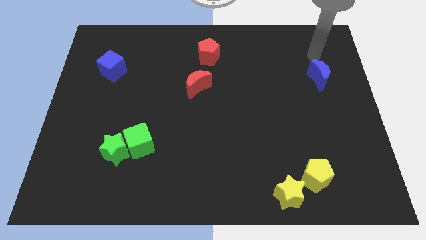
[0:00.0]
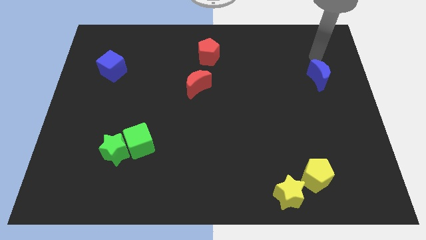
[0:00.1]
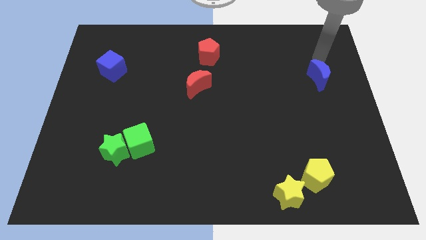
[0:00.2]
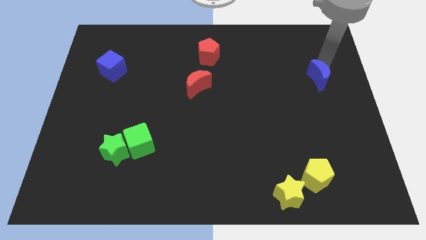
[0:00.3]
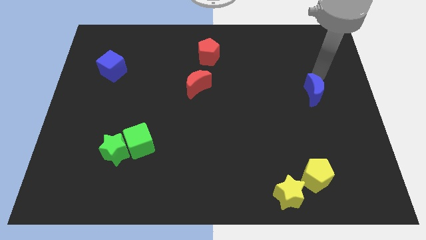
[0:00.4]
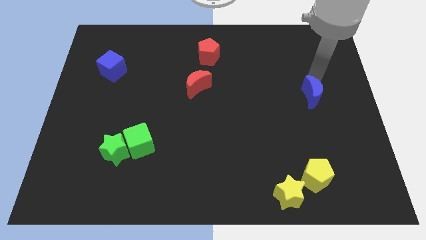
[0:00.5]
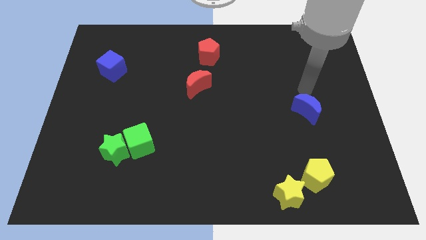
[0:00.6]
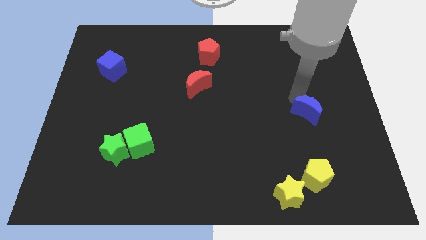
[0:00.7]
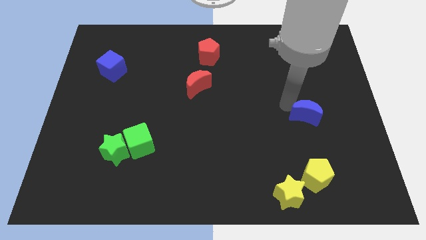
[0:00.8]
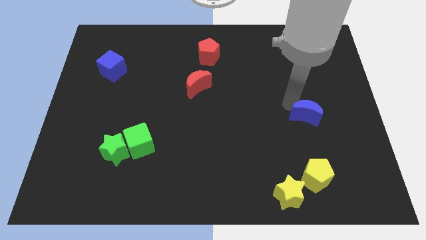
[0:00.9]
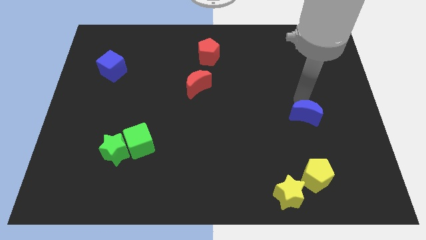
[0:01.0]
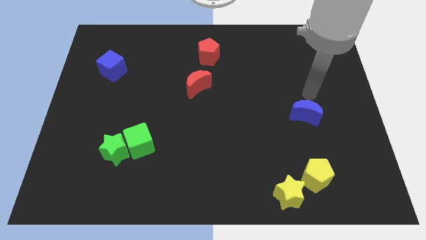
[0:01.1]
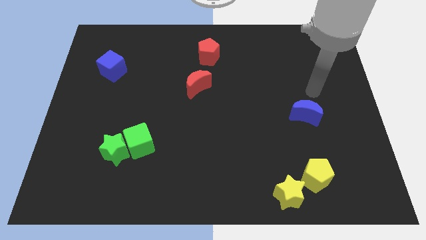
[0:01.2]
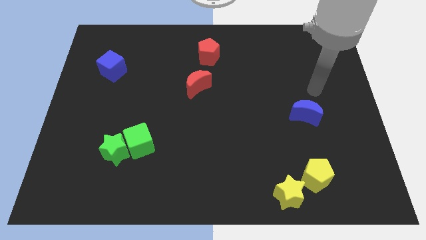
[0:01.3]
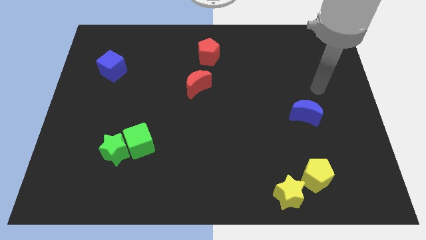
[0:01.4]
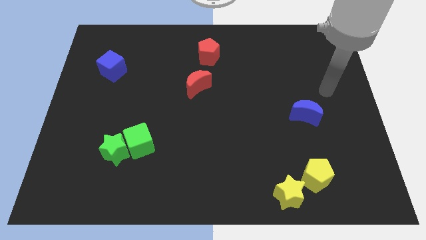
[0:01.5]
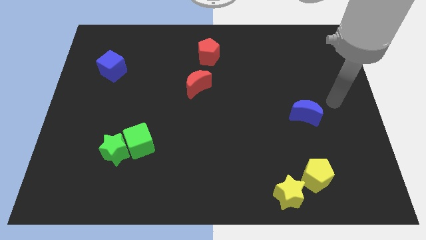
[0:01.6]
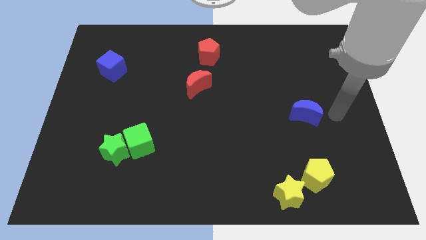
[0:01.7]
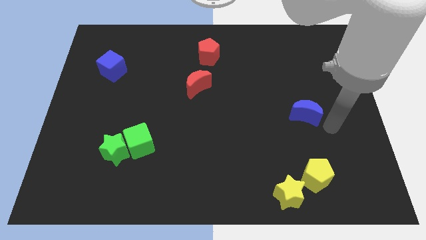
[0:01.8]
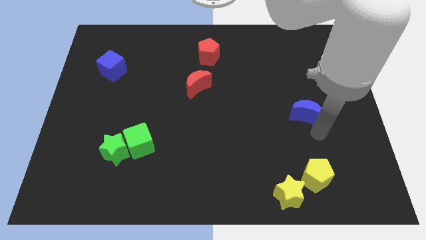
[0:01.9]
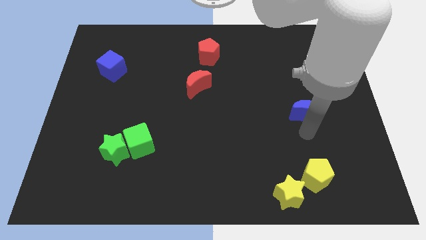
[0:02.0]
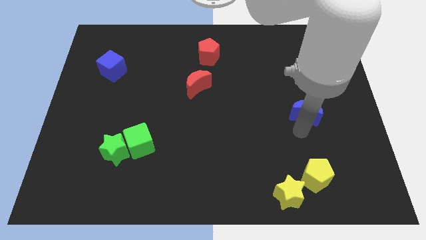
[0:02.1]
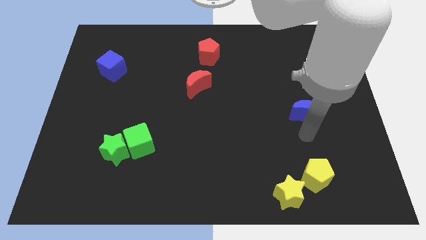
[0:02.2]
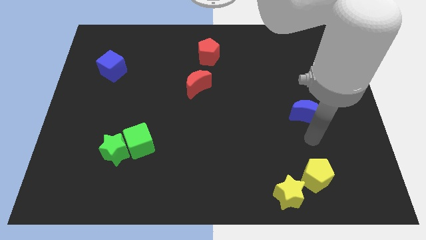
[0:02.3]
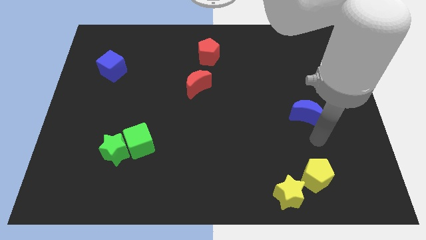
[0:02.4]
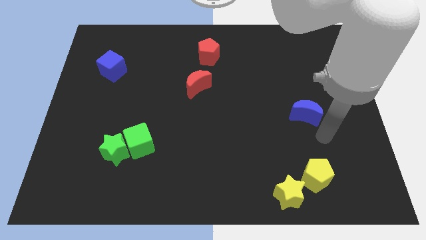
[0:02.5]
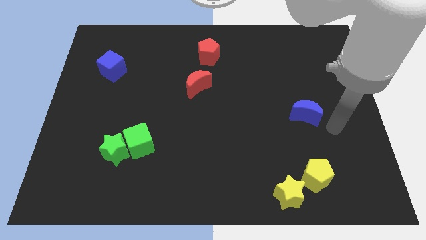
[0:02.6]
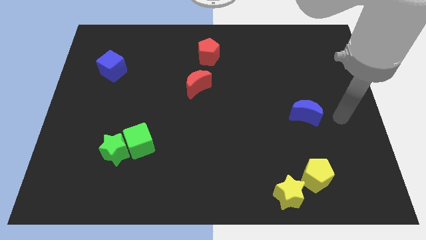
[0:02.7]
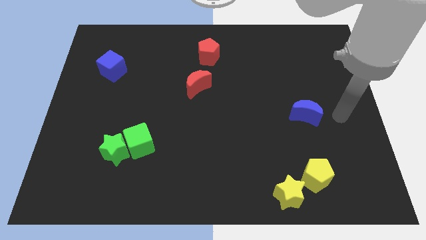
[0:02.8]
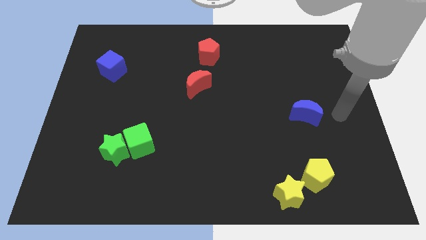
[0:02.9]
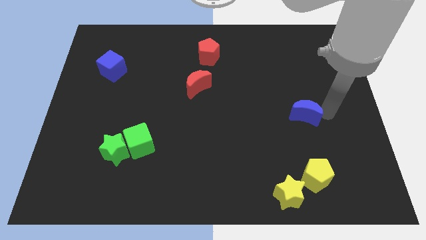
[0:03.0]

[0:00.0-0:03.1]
place the blue crescent above the group of yellow blocks

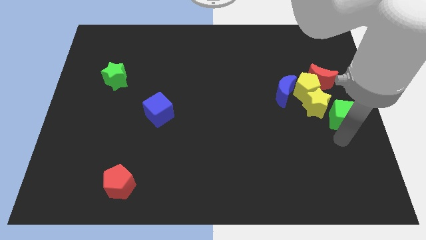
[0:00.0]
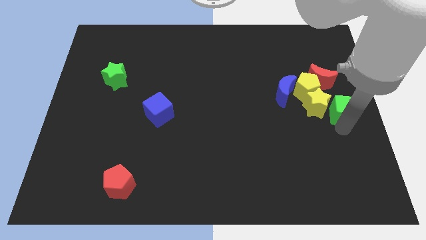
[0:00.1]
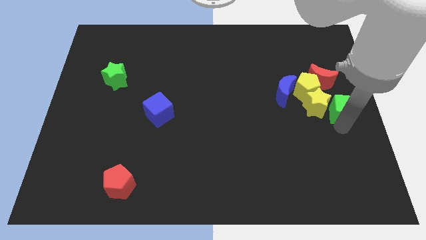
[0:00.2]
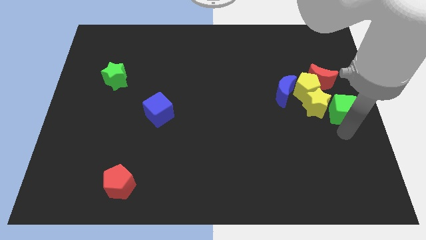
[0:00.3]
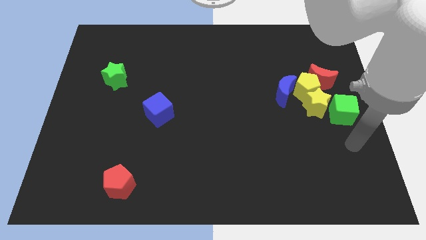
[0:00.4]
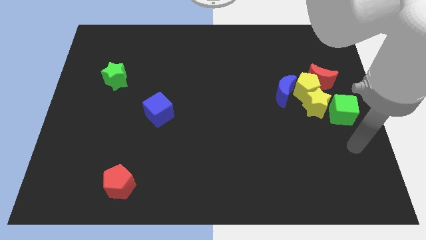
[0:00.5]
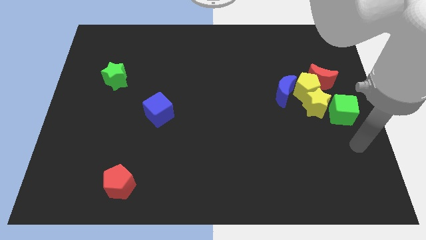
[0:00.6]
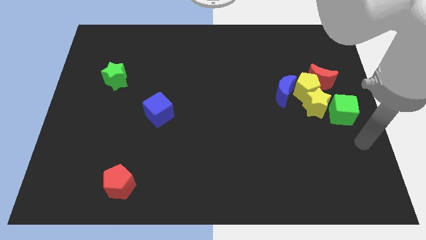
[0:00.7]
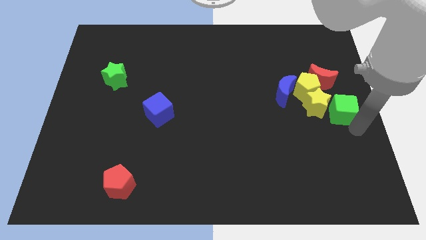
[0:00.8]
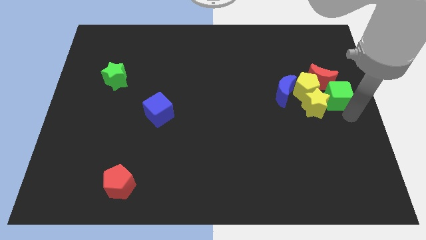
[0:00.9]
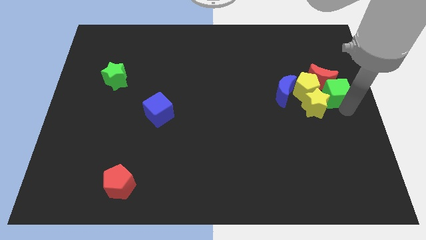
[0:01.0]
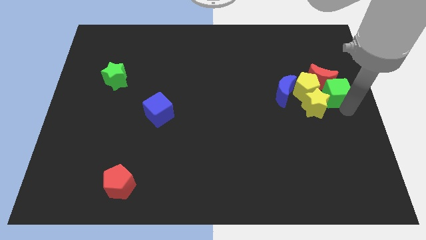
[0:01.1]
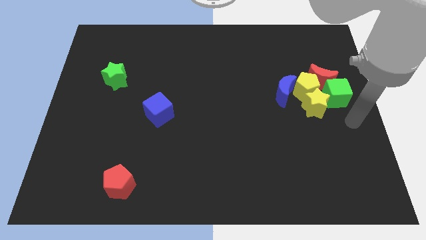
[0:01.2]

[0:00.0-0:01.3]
place the green cube right to the yellow pentagon

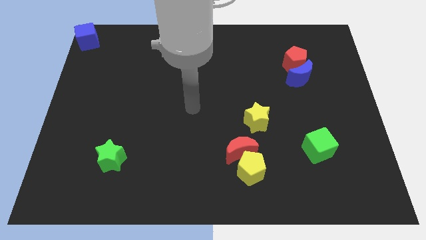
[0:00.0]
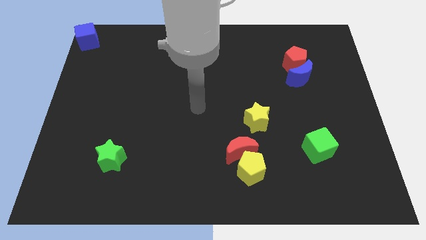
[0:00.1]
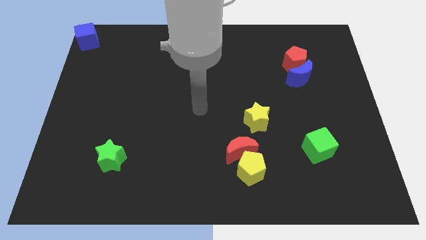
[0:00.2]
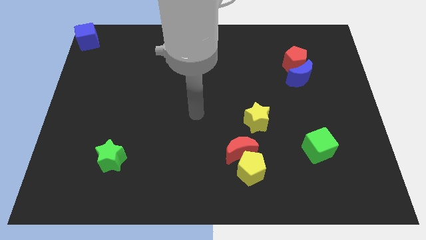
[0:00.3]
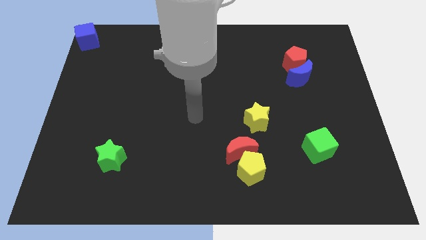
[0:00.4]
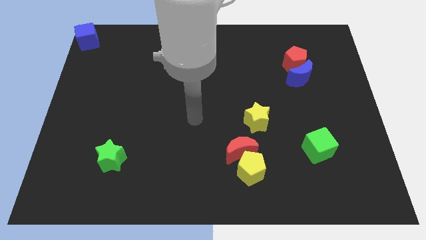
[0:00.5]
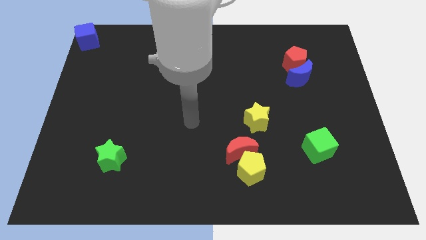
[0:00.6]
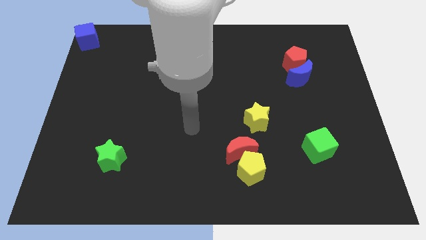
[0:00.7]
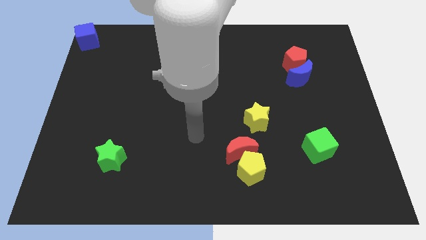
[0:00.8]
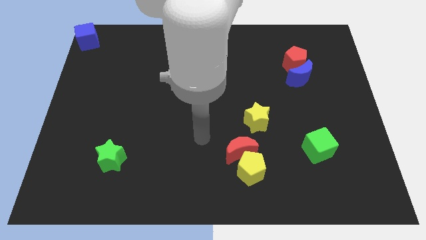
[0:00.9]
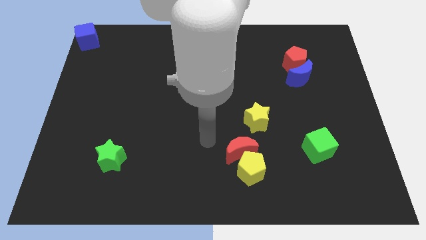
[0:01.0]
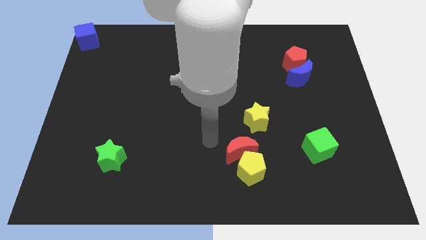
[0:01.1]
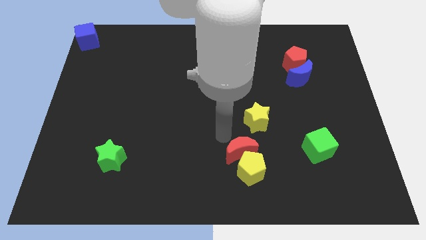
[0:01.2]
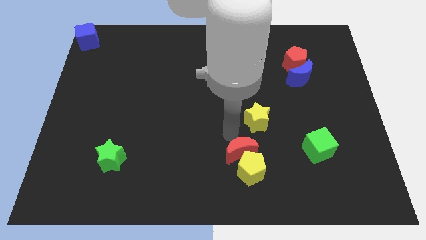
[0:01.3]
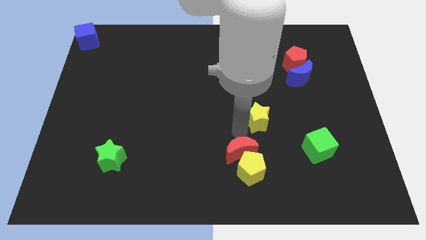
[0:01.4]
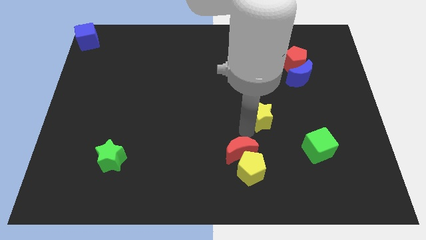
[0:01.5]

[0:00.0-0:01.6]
move the arm towards the yellow star

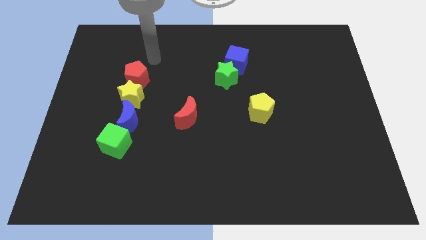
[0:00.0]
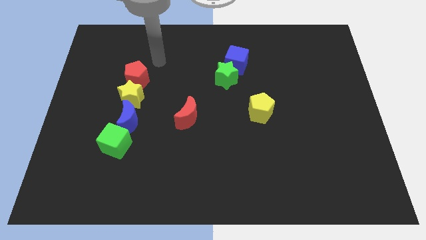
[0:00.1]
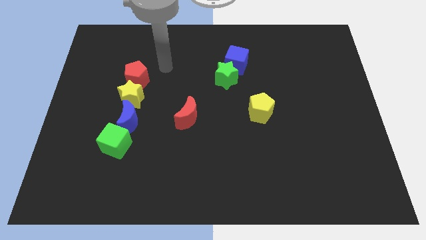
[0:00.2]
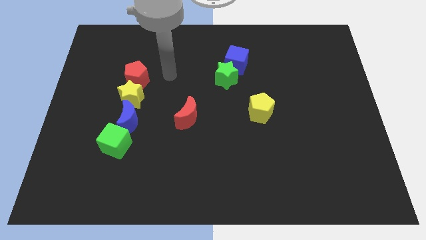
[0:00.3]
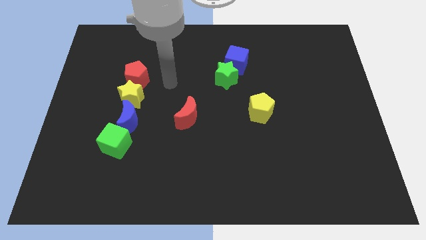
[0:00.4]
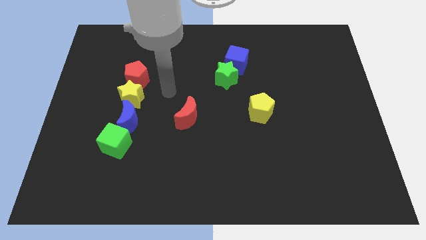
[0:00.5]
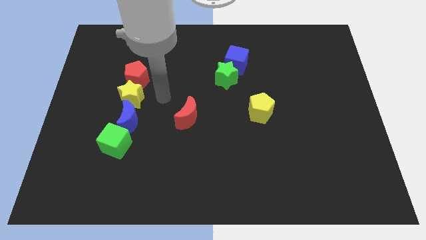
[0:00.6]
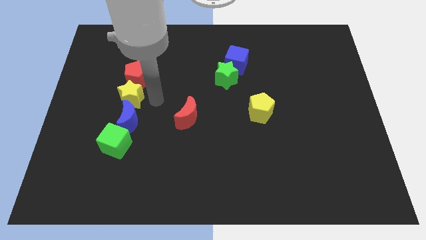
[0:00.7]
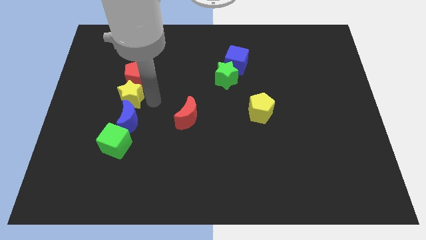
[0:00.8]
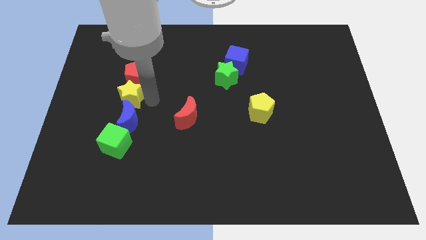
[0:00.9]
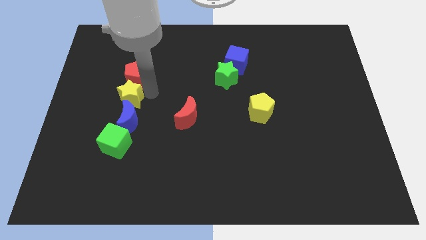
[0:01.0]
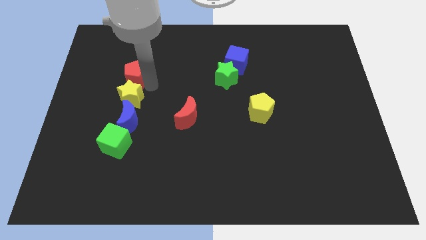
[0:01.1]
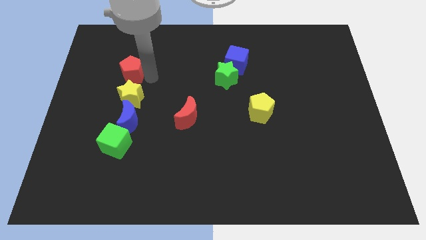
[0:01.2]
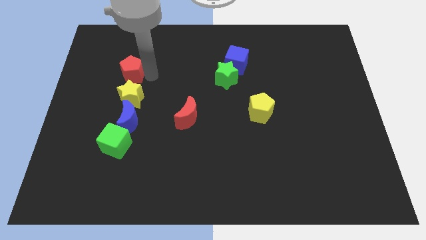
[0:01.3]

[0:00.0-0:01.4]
slightly push the red pentagon to the top of the board

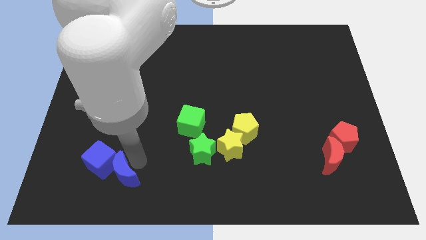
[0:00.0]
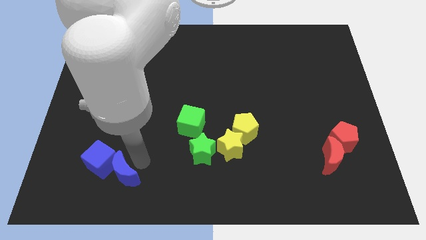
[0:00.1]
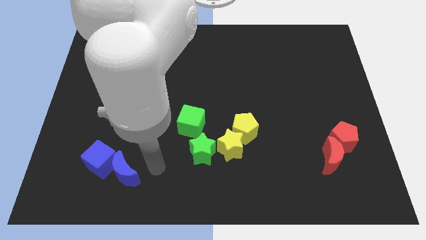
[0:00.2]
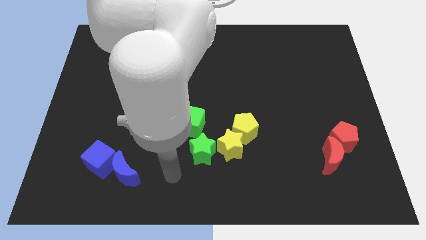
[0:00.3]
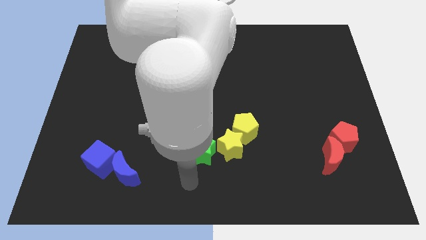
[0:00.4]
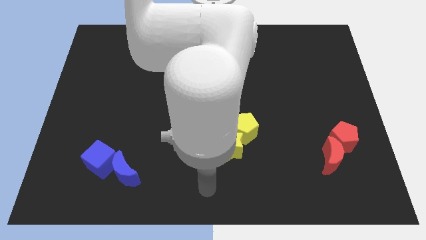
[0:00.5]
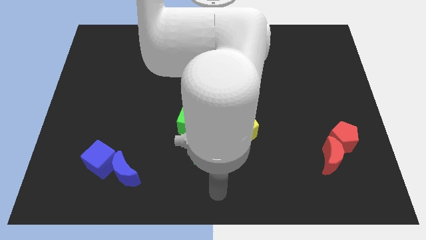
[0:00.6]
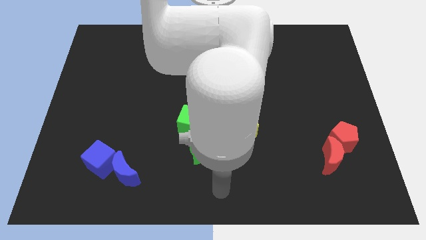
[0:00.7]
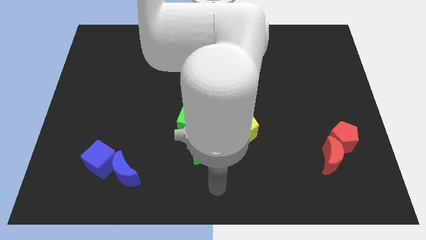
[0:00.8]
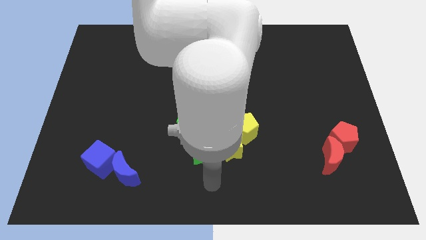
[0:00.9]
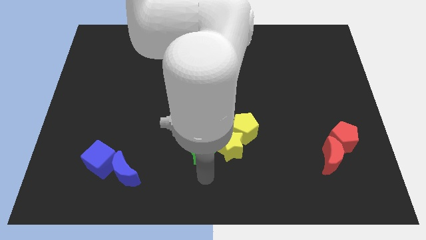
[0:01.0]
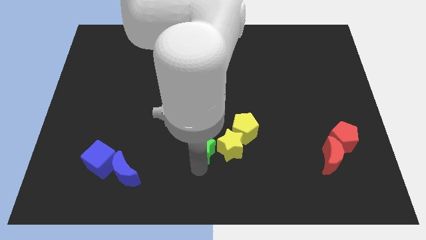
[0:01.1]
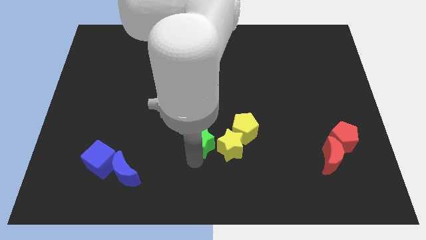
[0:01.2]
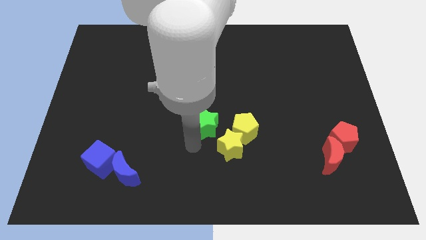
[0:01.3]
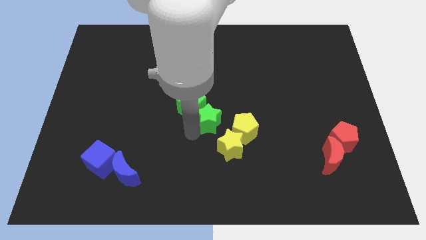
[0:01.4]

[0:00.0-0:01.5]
move the green blocks slightly towards the center
